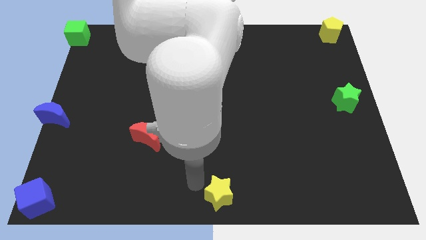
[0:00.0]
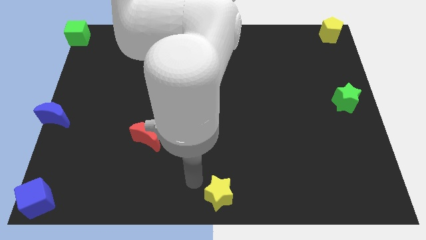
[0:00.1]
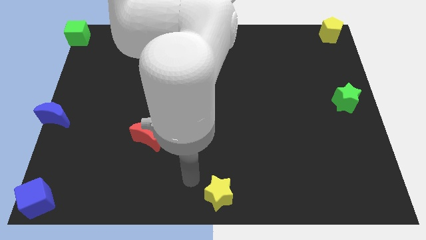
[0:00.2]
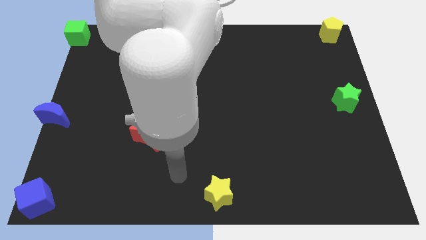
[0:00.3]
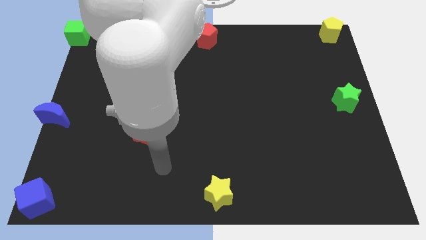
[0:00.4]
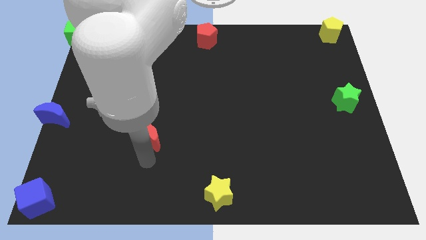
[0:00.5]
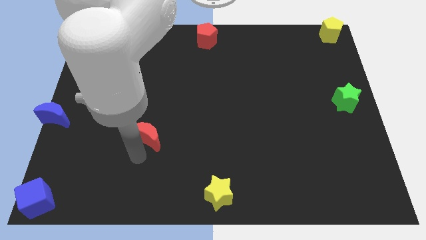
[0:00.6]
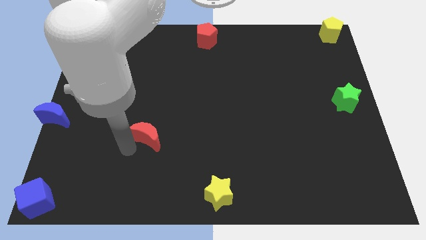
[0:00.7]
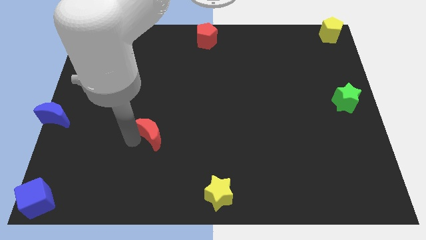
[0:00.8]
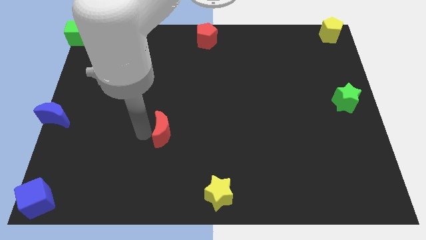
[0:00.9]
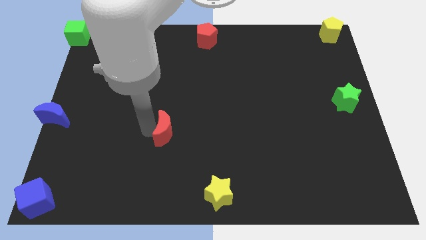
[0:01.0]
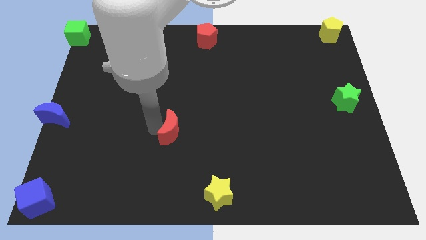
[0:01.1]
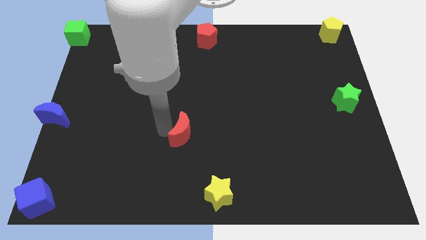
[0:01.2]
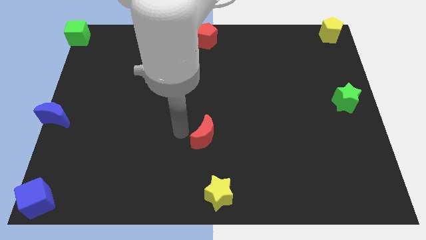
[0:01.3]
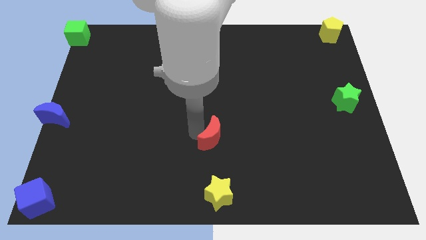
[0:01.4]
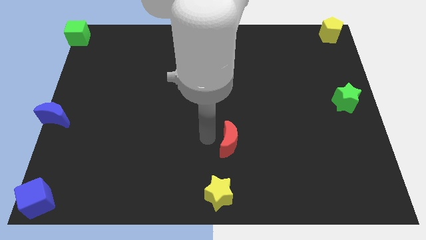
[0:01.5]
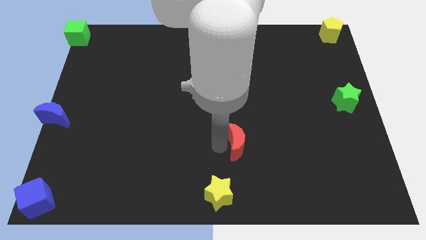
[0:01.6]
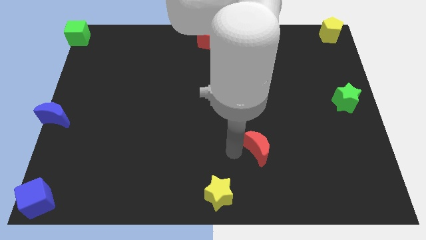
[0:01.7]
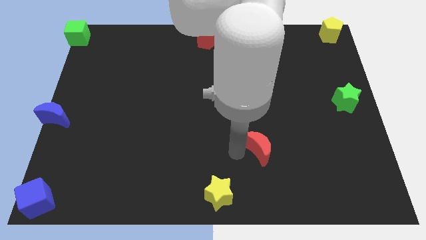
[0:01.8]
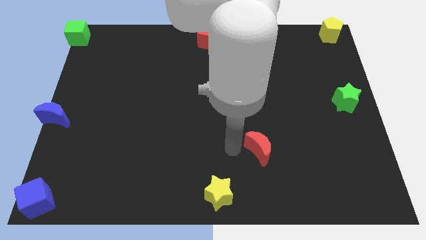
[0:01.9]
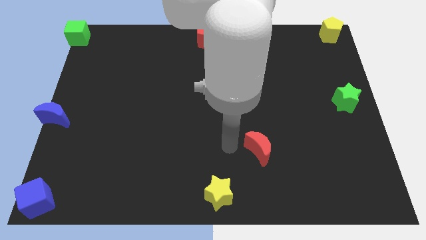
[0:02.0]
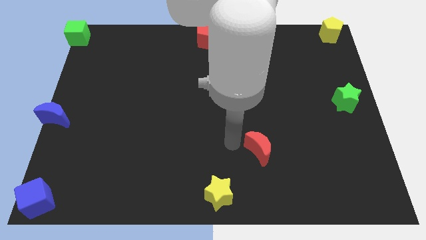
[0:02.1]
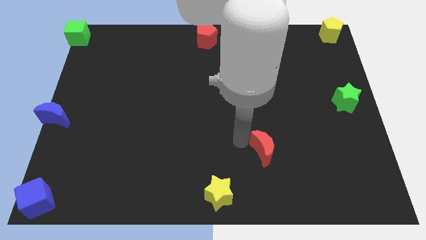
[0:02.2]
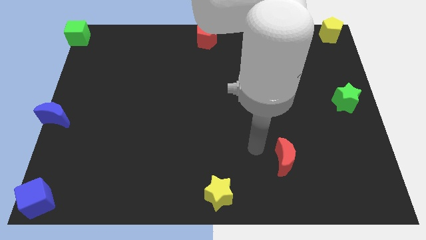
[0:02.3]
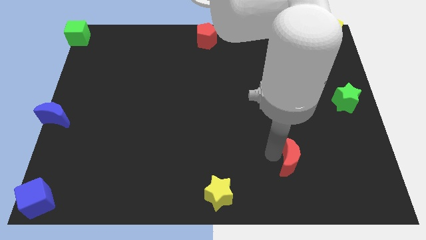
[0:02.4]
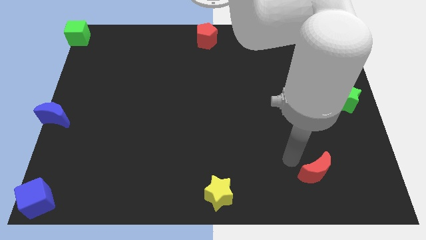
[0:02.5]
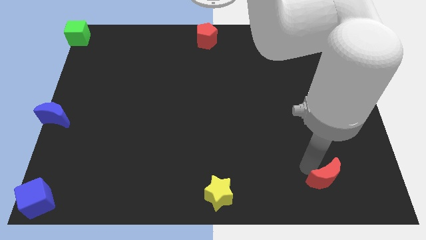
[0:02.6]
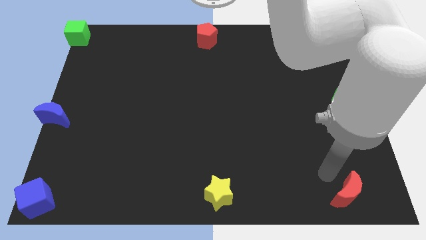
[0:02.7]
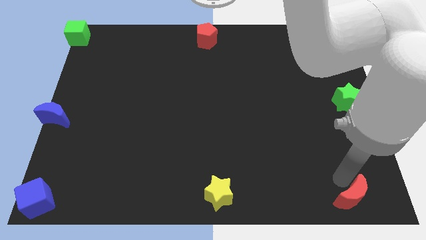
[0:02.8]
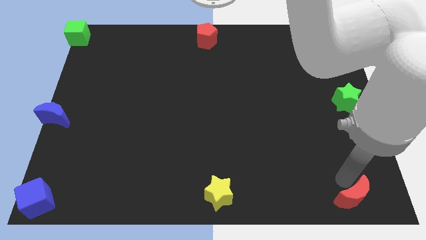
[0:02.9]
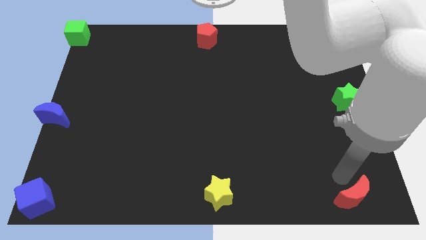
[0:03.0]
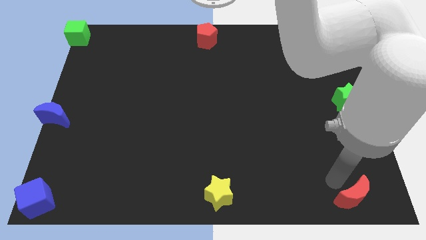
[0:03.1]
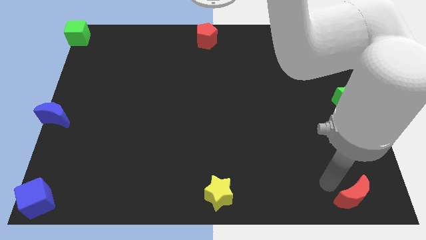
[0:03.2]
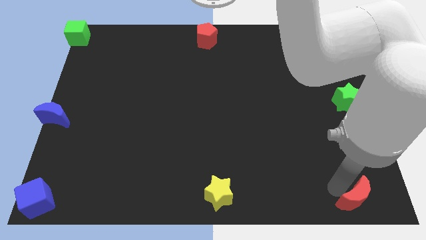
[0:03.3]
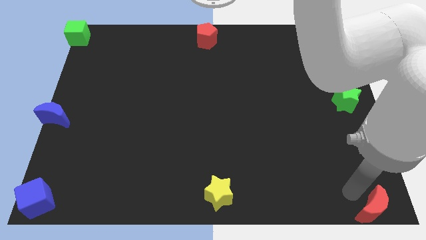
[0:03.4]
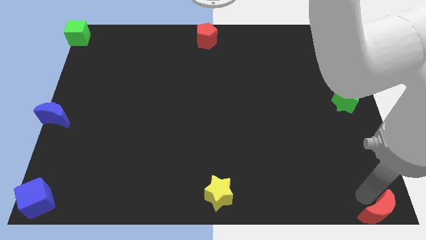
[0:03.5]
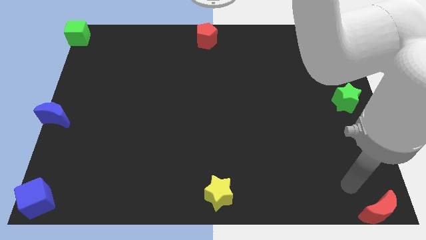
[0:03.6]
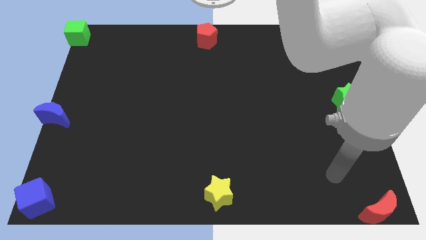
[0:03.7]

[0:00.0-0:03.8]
place red crescent towards bottom right corner

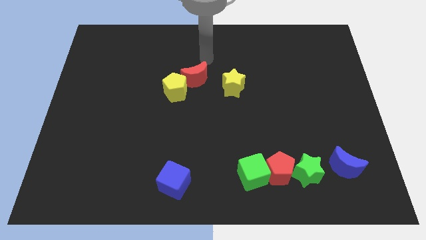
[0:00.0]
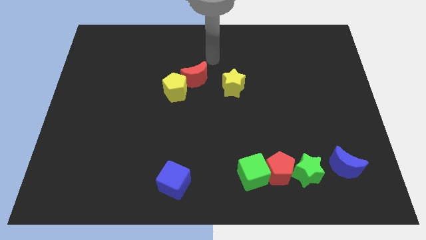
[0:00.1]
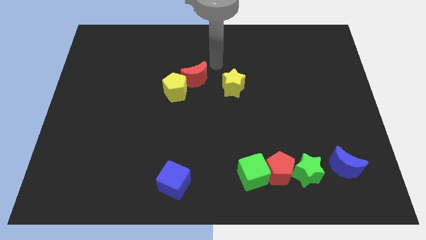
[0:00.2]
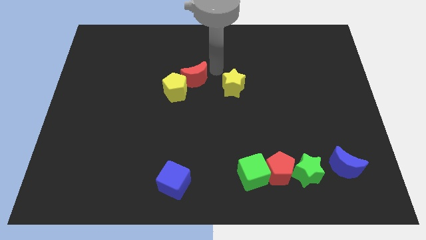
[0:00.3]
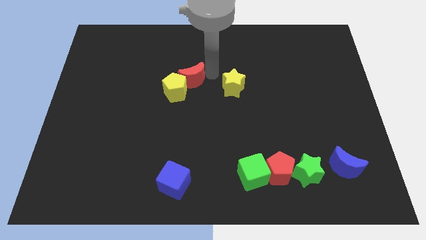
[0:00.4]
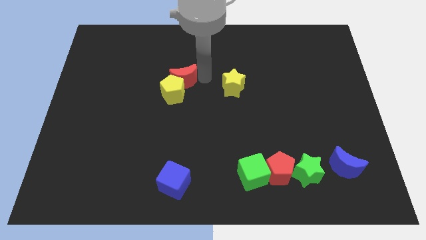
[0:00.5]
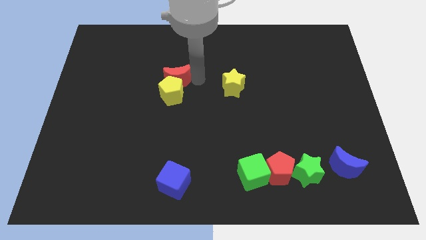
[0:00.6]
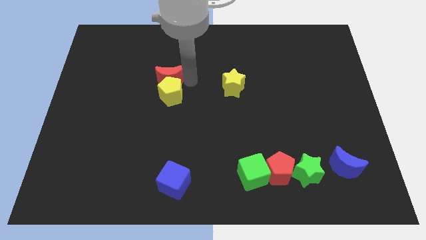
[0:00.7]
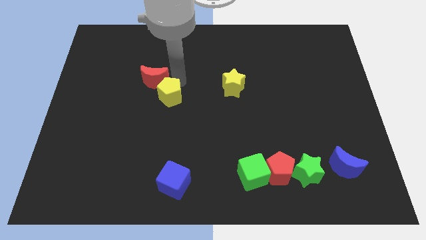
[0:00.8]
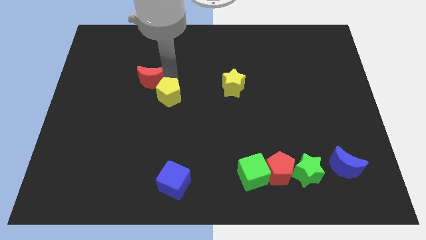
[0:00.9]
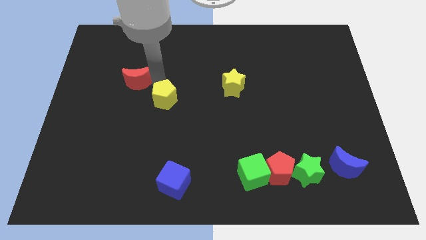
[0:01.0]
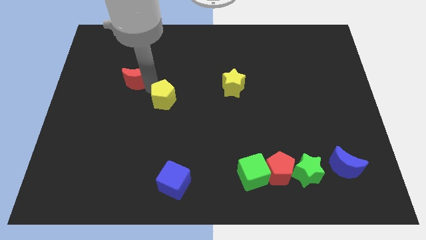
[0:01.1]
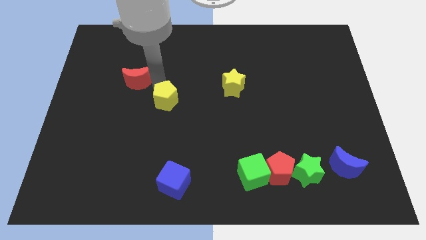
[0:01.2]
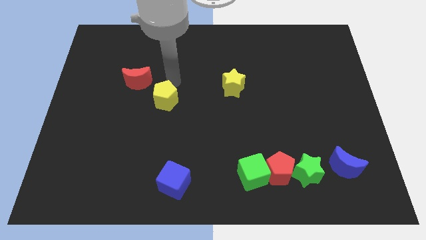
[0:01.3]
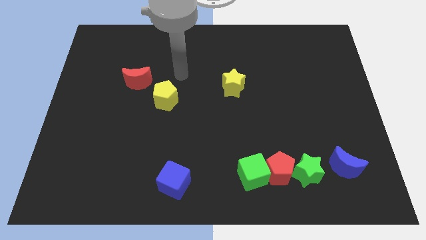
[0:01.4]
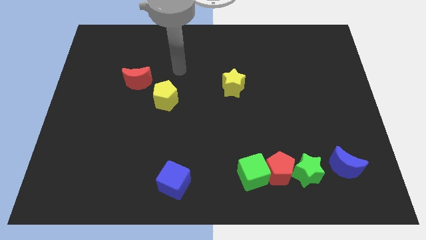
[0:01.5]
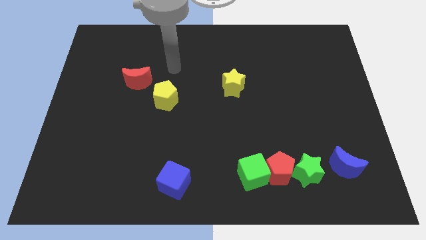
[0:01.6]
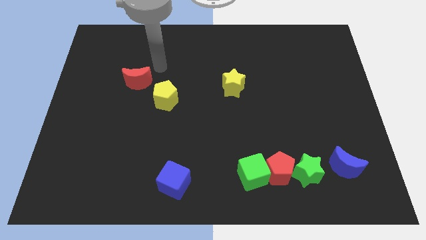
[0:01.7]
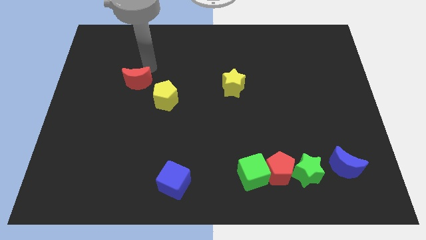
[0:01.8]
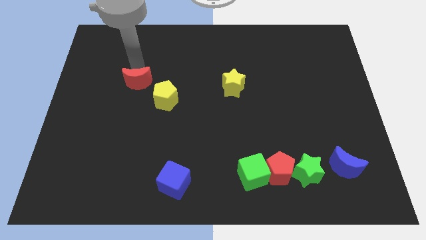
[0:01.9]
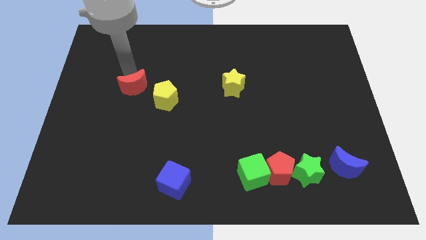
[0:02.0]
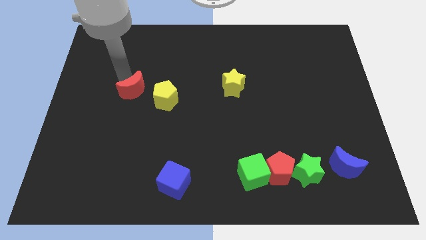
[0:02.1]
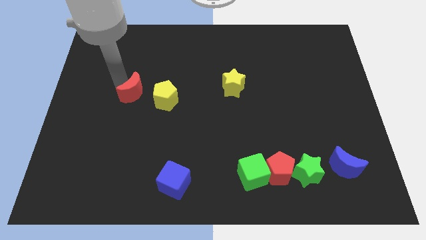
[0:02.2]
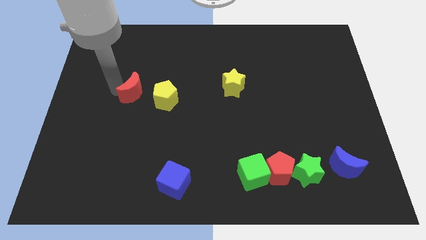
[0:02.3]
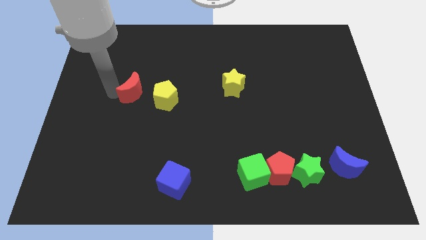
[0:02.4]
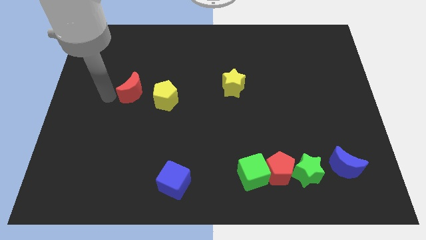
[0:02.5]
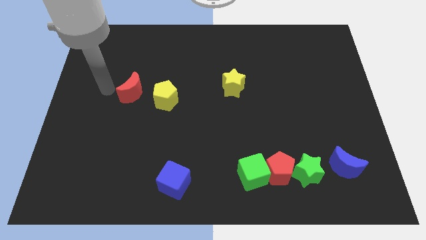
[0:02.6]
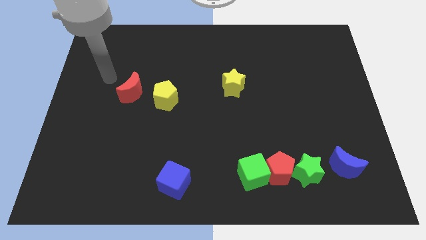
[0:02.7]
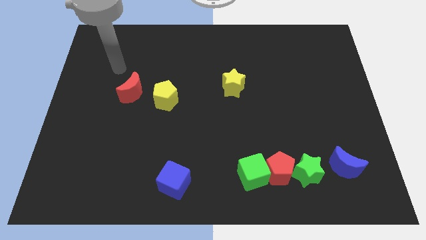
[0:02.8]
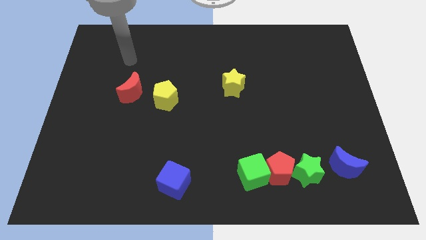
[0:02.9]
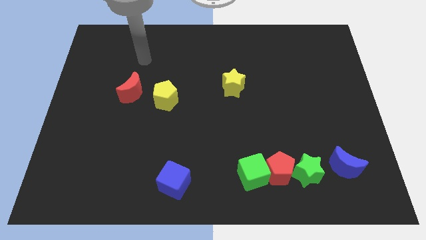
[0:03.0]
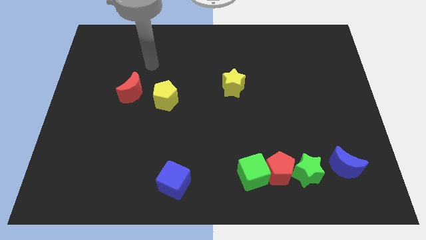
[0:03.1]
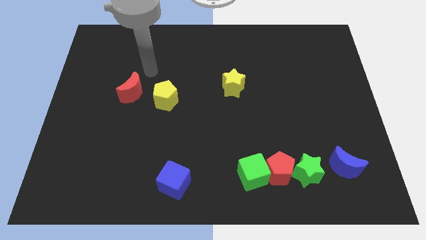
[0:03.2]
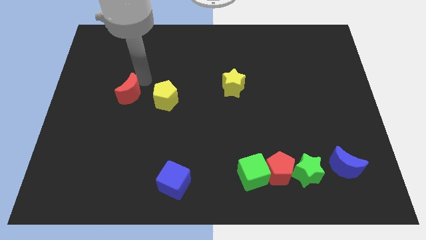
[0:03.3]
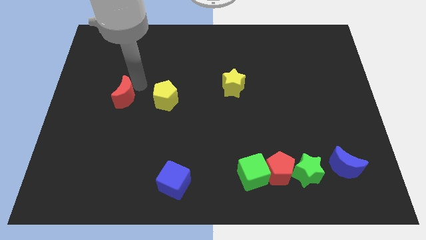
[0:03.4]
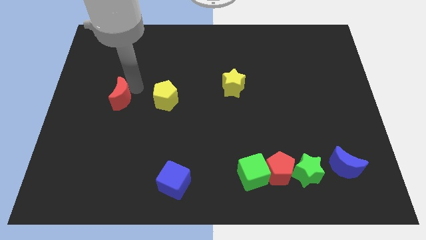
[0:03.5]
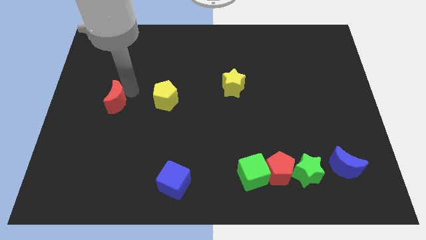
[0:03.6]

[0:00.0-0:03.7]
place the red crescent to the left of the yellow pentagon

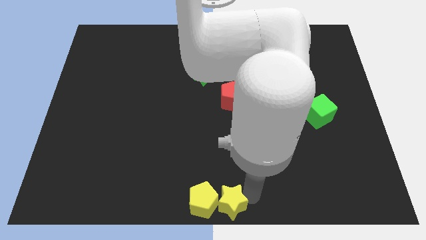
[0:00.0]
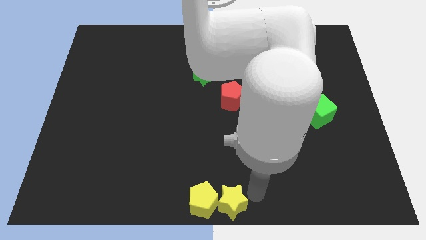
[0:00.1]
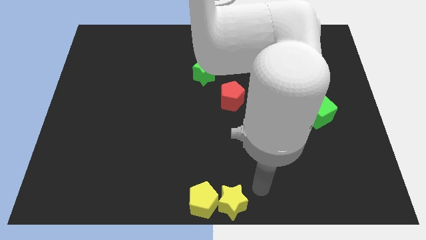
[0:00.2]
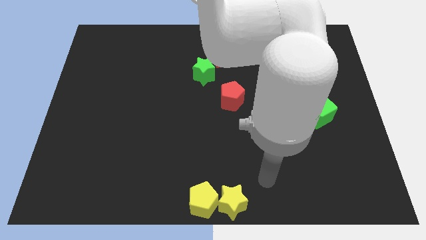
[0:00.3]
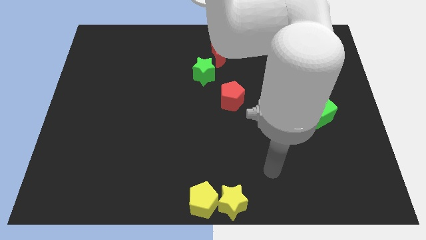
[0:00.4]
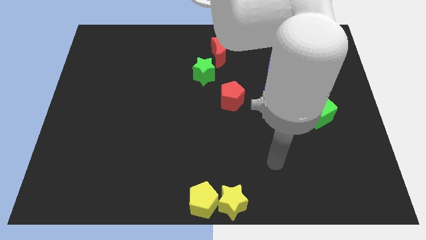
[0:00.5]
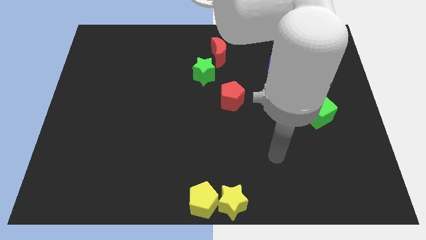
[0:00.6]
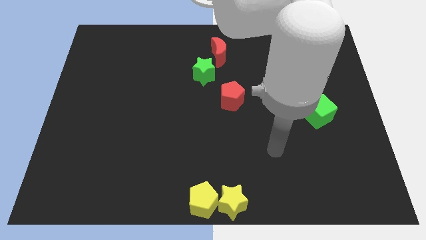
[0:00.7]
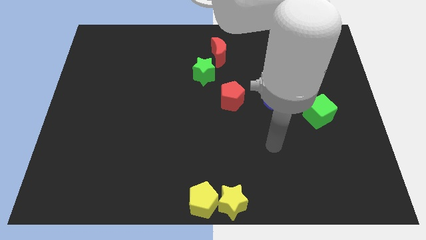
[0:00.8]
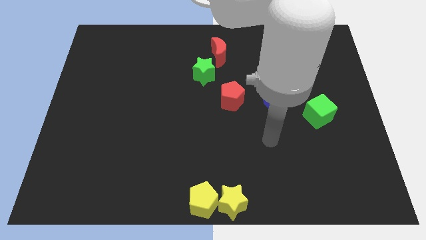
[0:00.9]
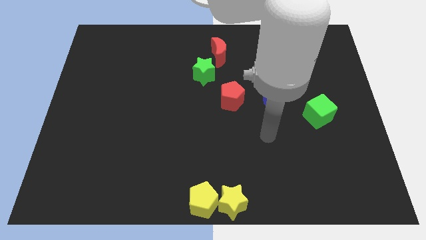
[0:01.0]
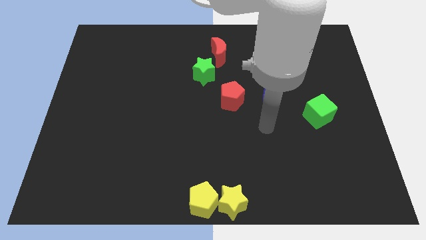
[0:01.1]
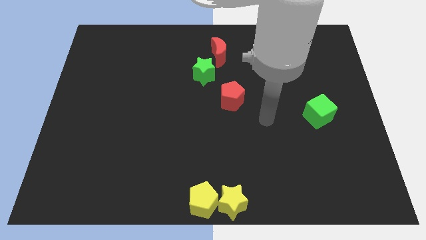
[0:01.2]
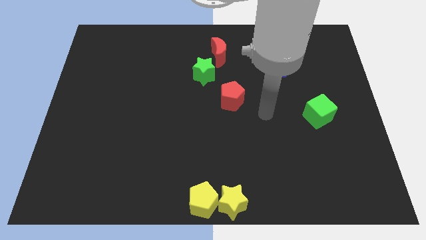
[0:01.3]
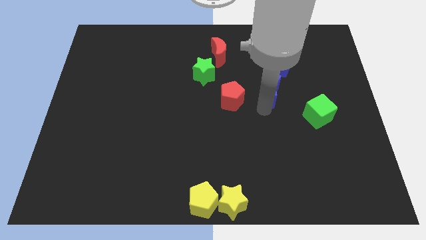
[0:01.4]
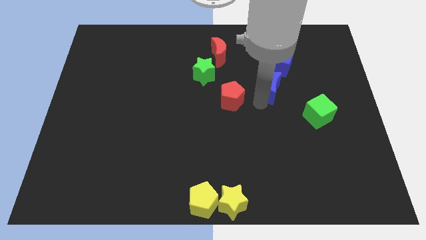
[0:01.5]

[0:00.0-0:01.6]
tap the blue crescent
